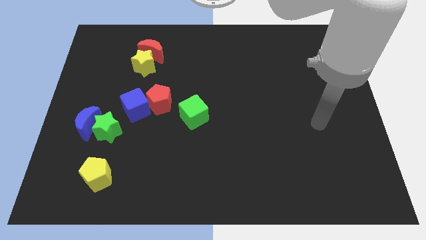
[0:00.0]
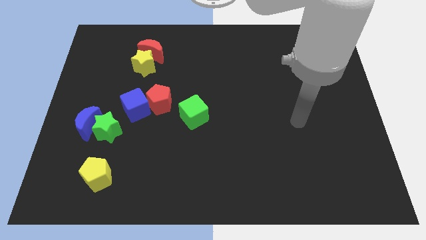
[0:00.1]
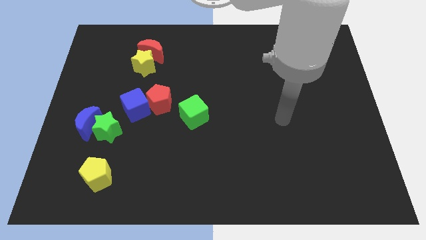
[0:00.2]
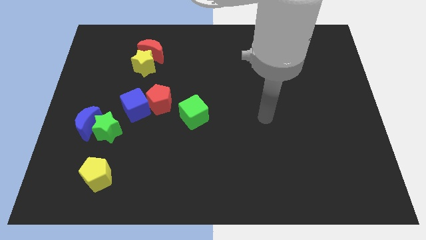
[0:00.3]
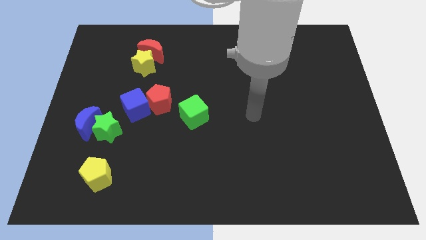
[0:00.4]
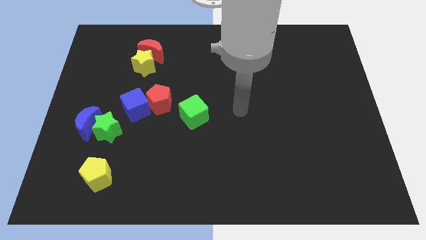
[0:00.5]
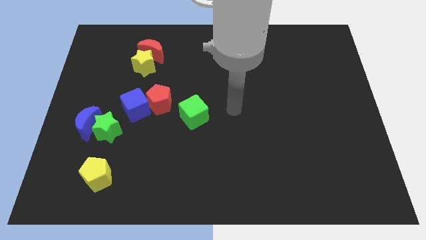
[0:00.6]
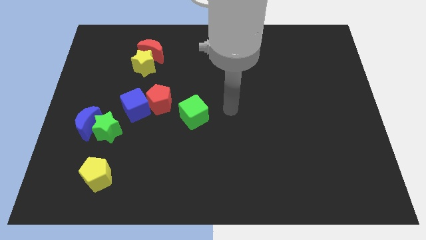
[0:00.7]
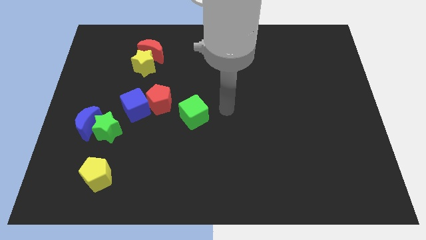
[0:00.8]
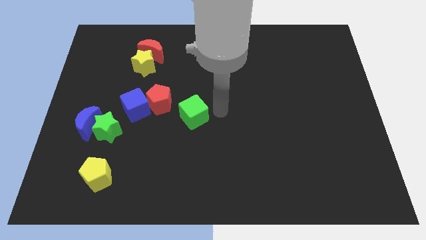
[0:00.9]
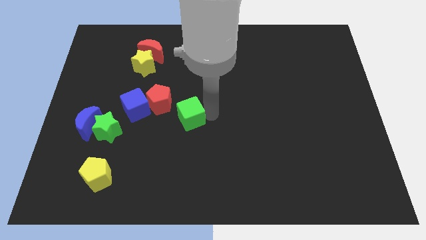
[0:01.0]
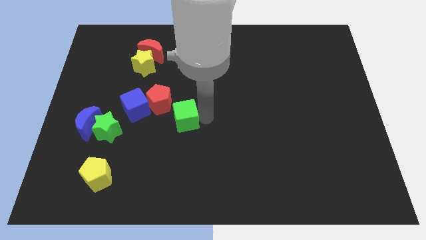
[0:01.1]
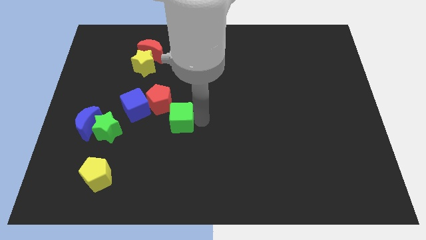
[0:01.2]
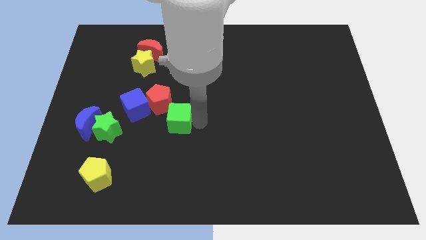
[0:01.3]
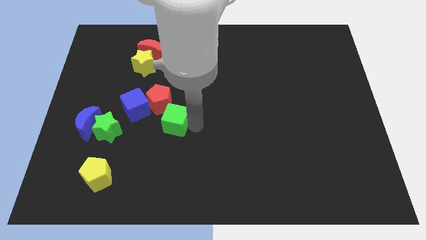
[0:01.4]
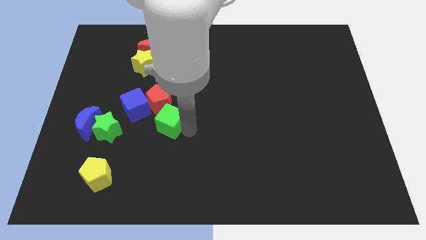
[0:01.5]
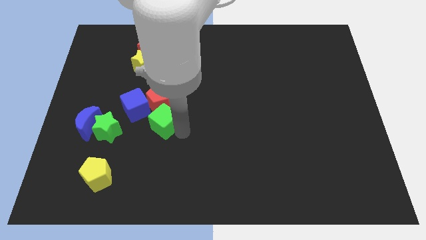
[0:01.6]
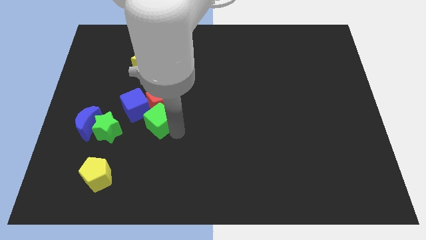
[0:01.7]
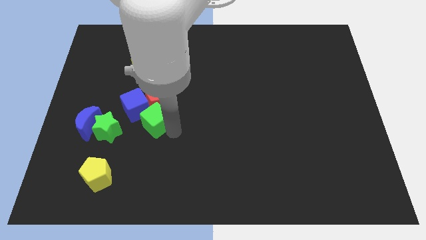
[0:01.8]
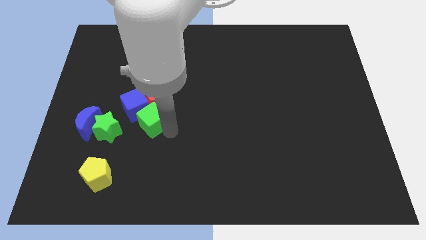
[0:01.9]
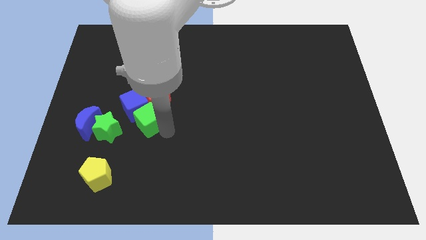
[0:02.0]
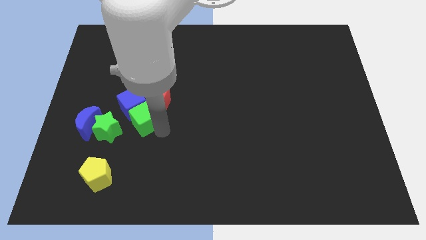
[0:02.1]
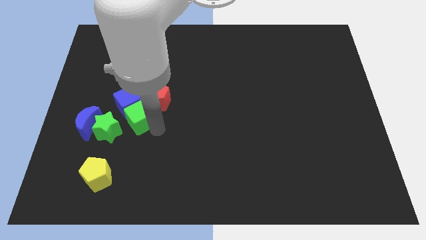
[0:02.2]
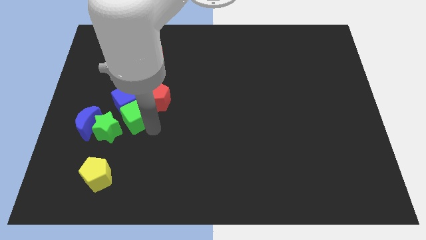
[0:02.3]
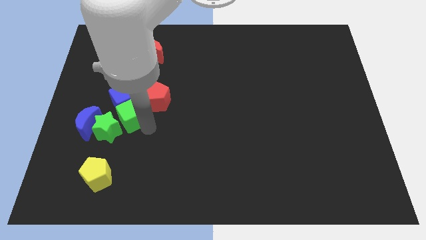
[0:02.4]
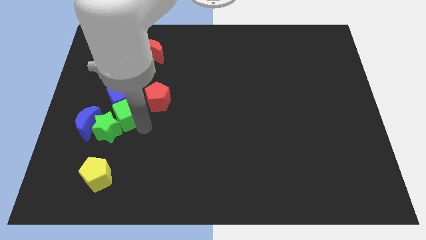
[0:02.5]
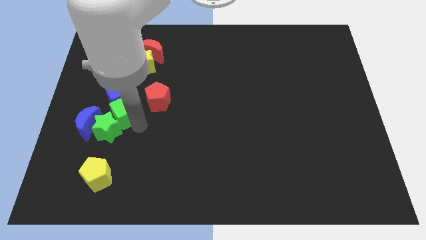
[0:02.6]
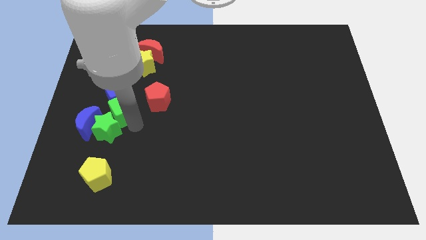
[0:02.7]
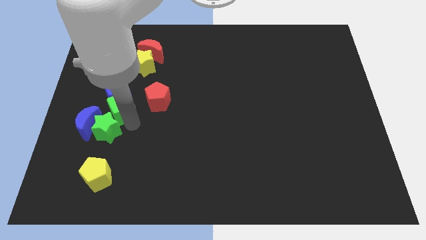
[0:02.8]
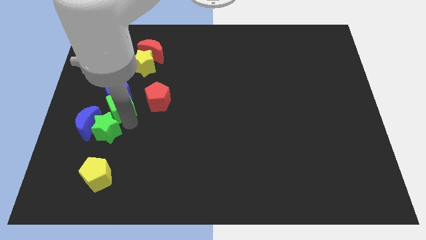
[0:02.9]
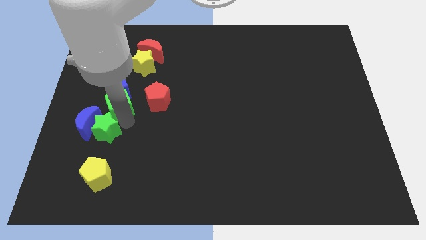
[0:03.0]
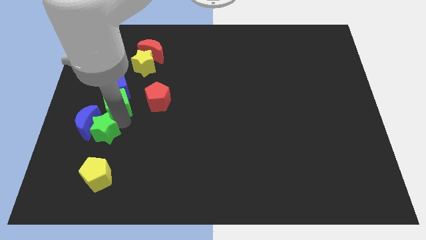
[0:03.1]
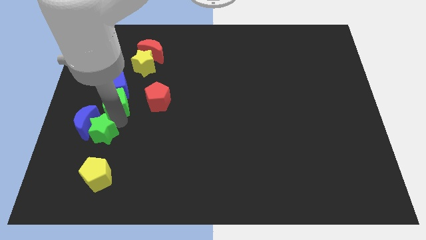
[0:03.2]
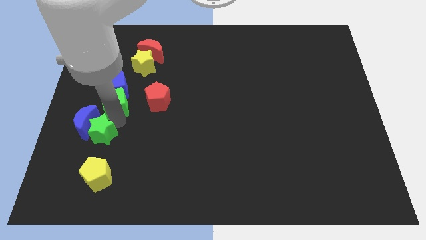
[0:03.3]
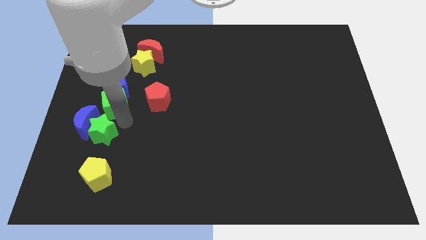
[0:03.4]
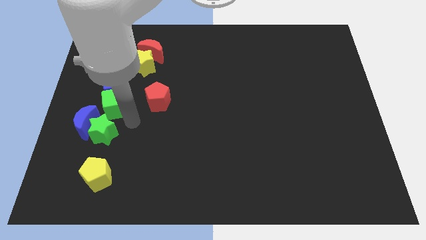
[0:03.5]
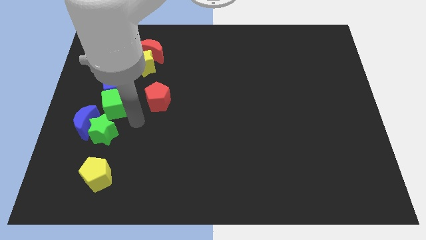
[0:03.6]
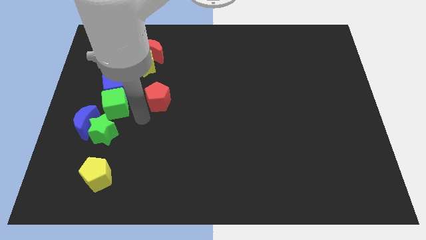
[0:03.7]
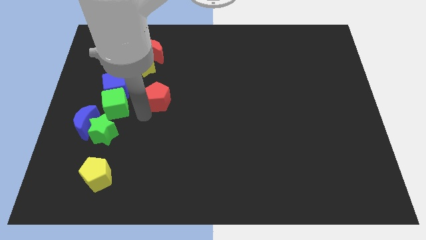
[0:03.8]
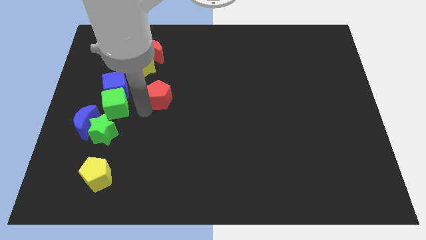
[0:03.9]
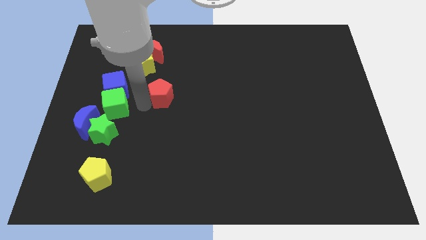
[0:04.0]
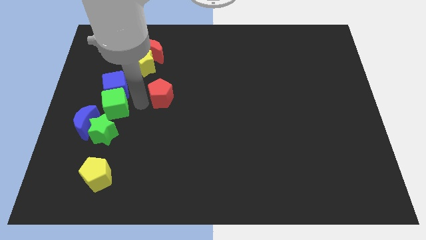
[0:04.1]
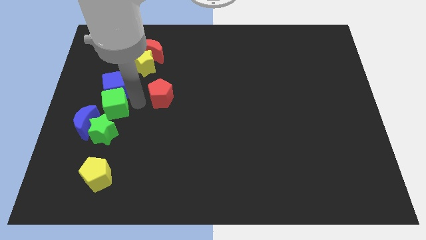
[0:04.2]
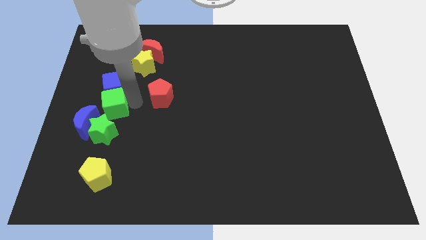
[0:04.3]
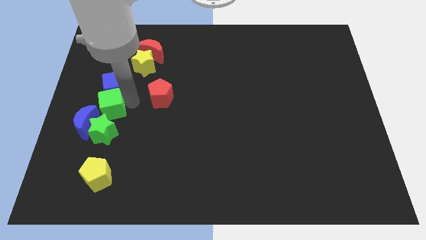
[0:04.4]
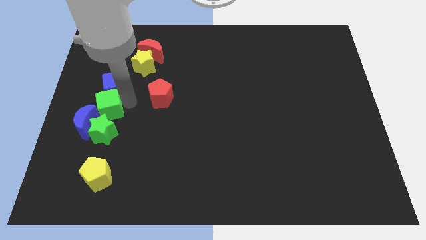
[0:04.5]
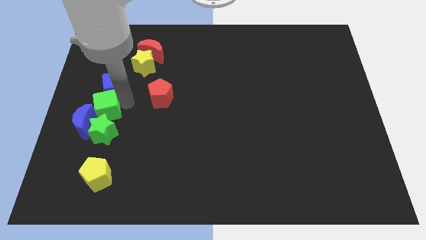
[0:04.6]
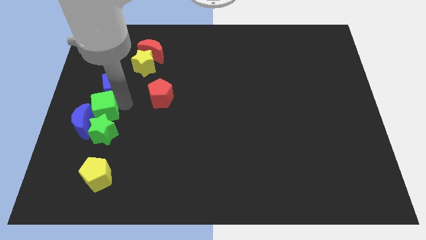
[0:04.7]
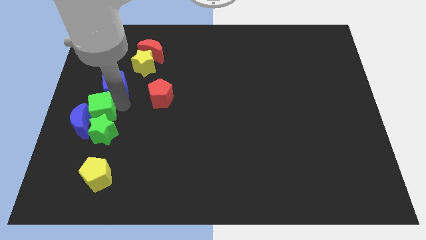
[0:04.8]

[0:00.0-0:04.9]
put the green cube close to the blue moon

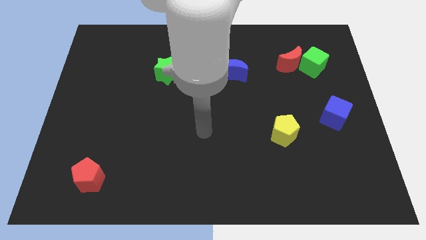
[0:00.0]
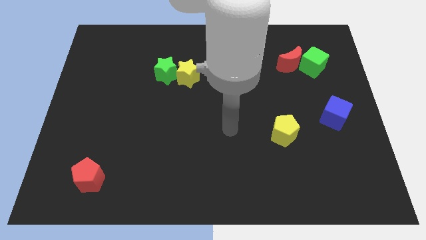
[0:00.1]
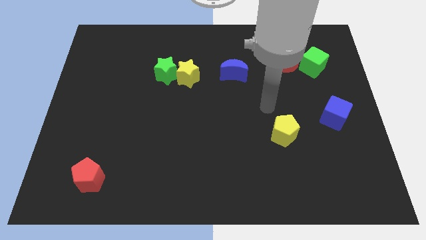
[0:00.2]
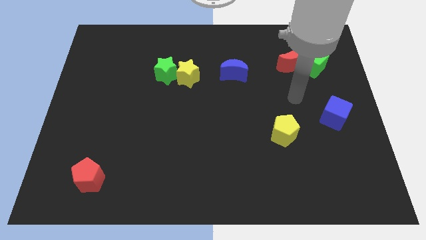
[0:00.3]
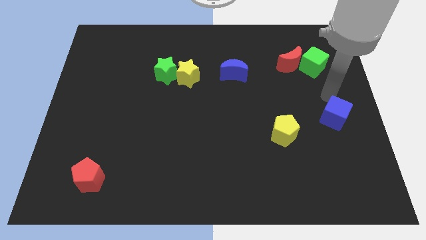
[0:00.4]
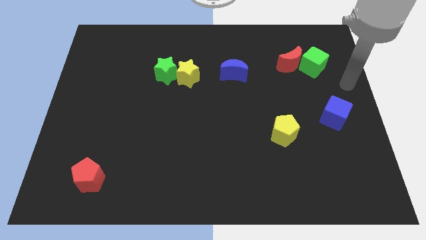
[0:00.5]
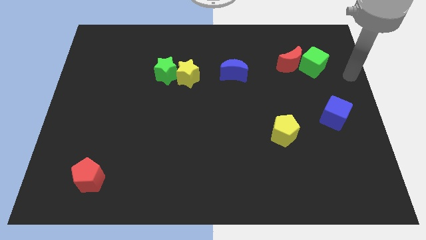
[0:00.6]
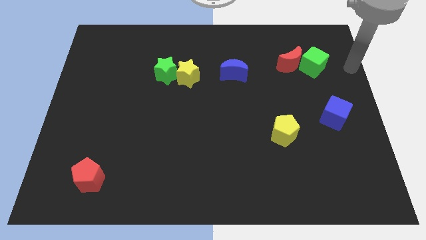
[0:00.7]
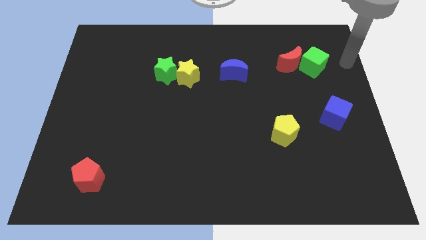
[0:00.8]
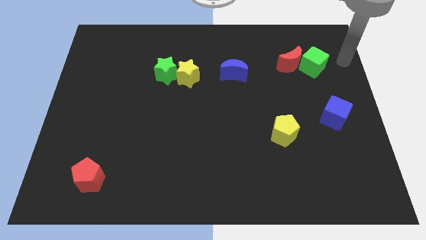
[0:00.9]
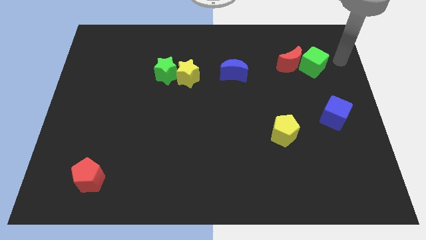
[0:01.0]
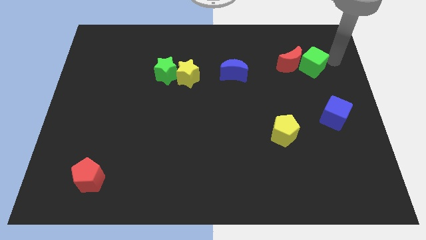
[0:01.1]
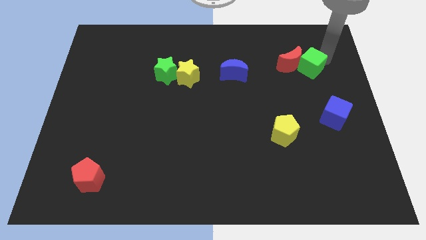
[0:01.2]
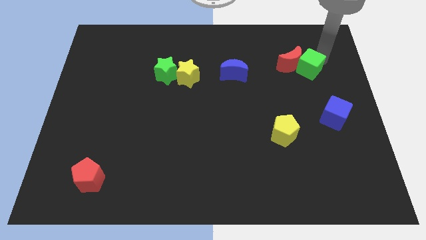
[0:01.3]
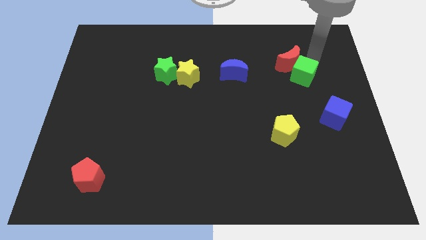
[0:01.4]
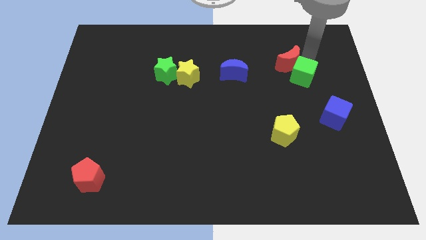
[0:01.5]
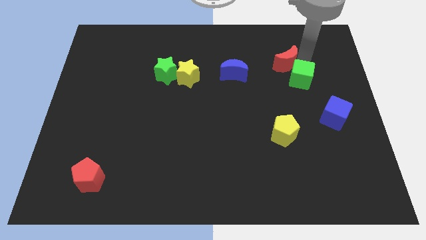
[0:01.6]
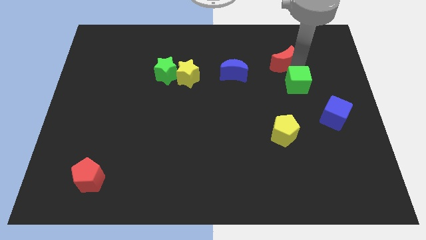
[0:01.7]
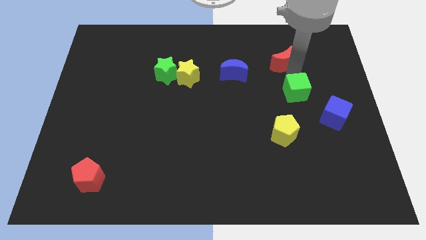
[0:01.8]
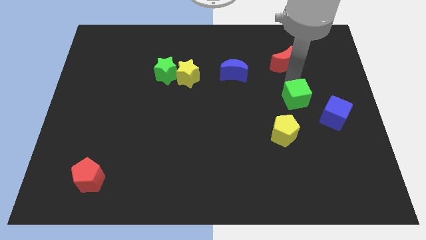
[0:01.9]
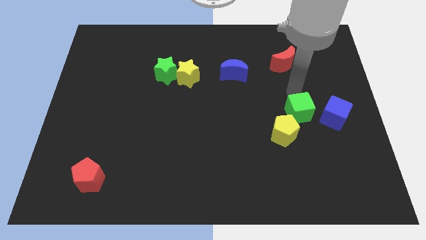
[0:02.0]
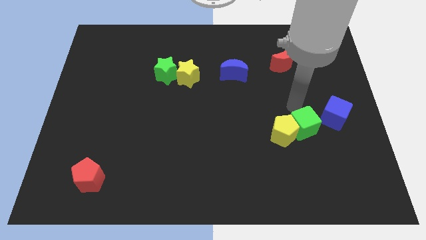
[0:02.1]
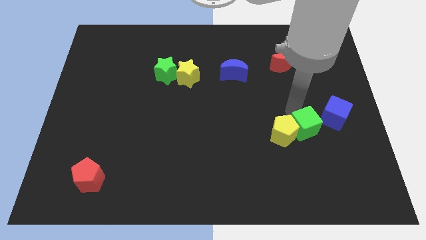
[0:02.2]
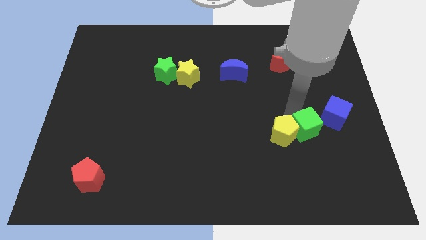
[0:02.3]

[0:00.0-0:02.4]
slide the green cube close to the yellow pentagon

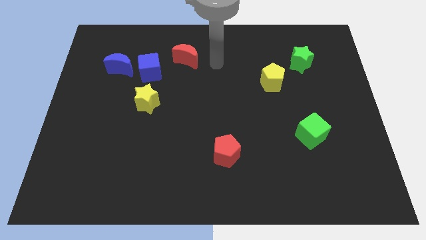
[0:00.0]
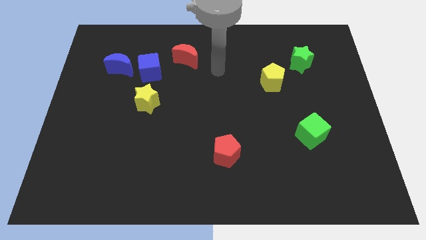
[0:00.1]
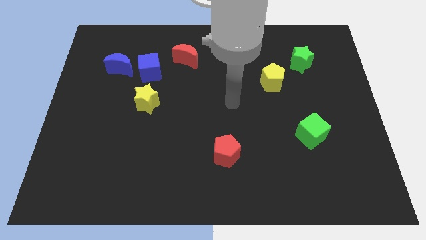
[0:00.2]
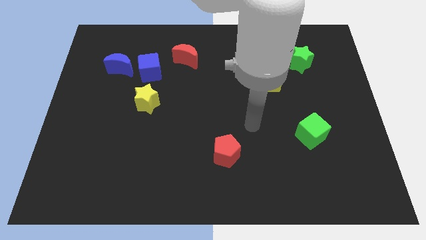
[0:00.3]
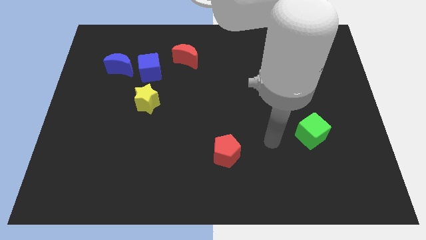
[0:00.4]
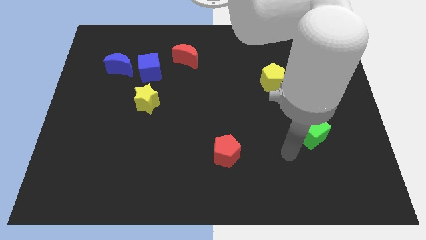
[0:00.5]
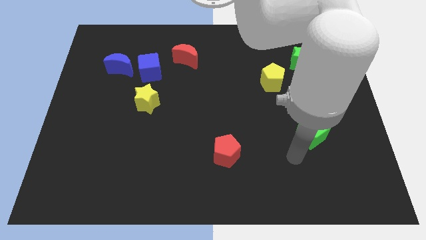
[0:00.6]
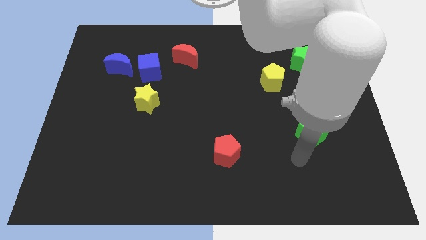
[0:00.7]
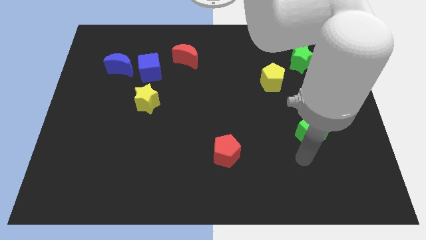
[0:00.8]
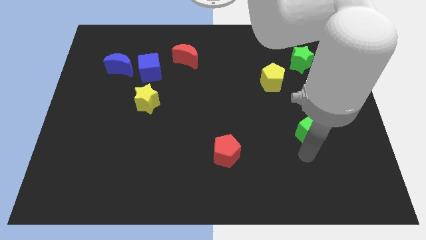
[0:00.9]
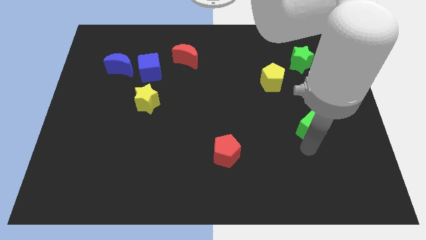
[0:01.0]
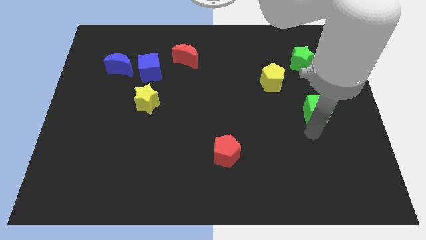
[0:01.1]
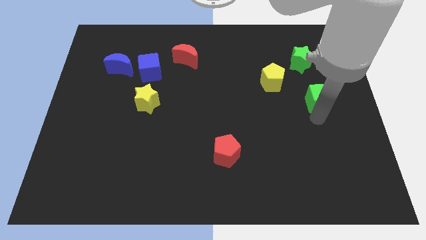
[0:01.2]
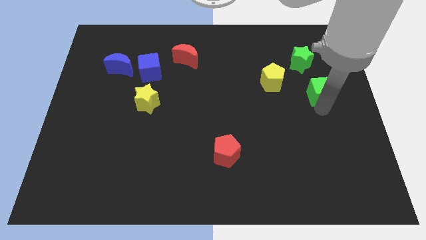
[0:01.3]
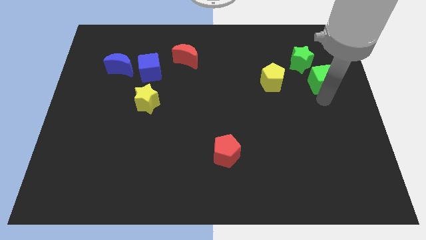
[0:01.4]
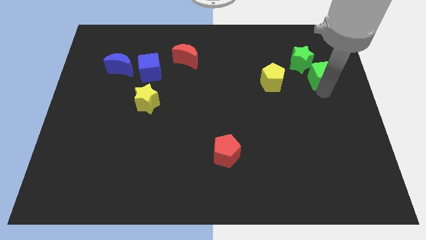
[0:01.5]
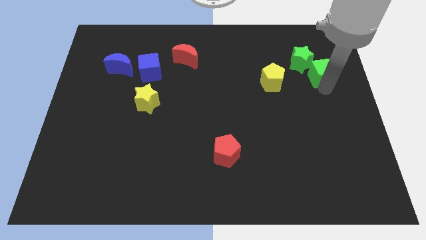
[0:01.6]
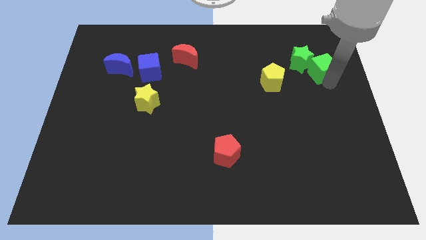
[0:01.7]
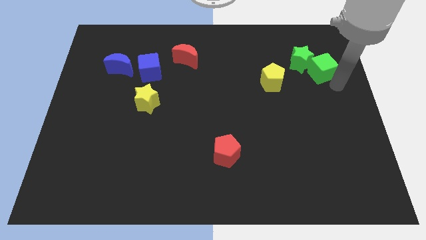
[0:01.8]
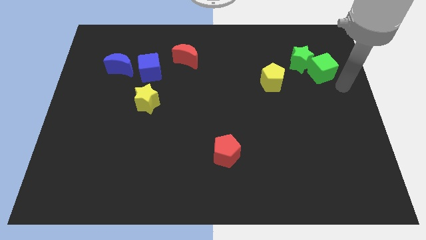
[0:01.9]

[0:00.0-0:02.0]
slide the green cube close to the green star
